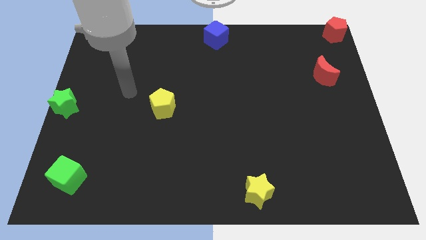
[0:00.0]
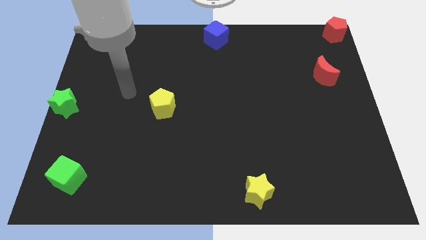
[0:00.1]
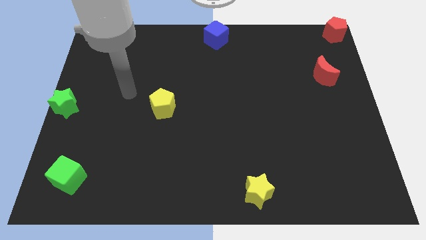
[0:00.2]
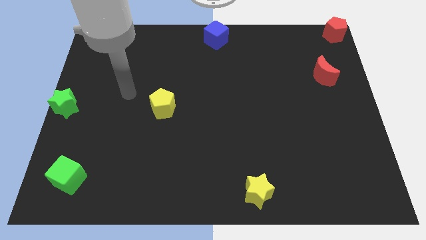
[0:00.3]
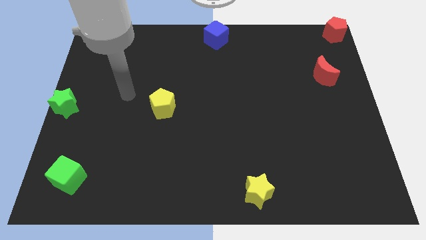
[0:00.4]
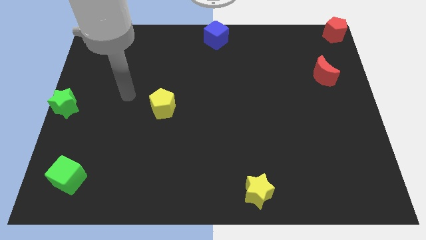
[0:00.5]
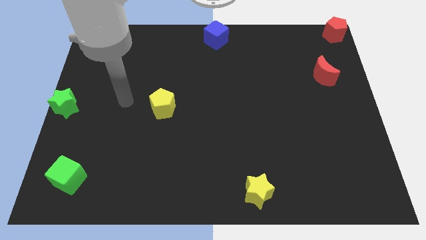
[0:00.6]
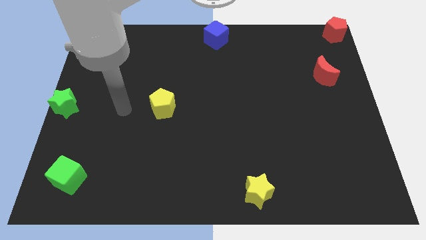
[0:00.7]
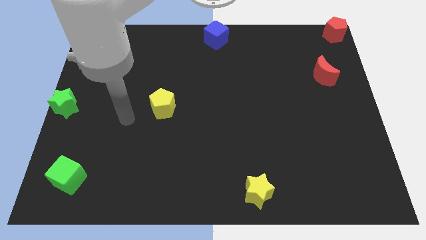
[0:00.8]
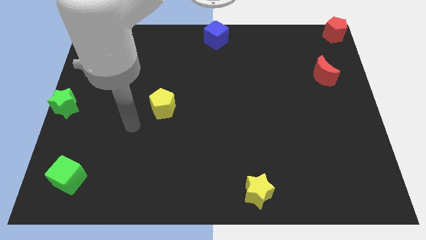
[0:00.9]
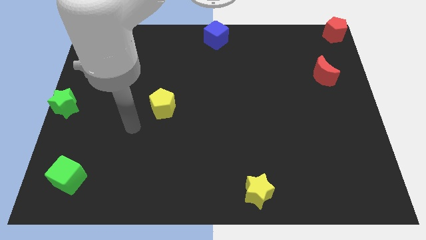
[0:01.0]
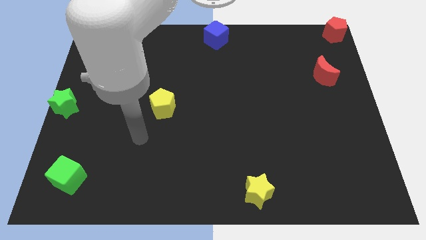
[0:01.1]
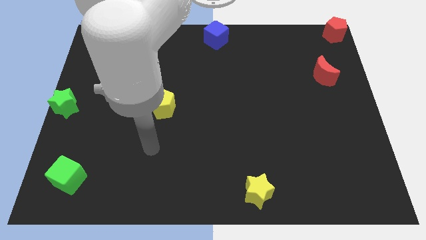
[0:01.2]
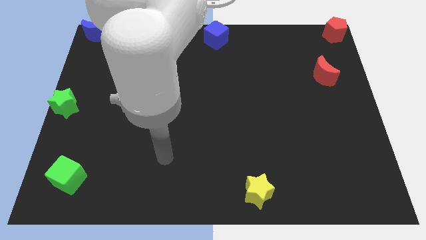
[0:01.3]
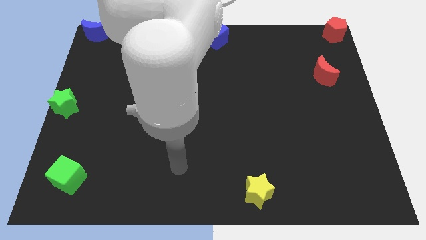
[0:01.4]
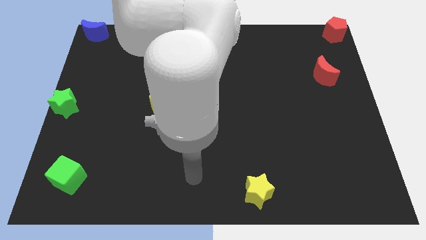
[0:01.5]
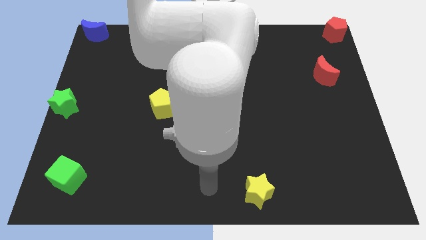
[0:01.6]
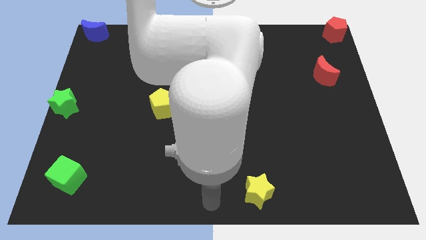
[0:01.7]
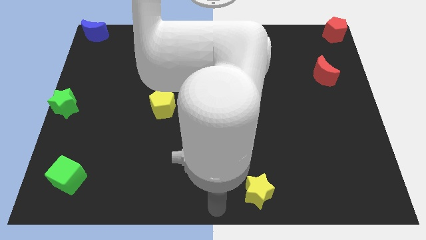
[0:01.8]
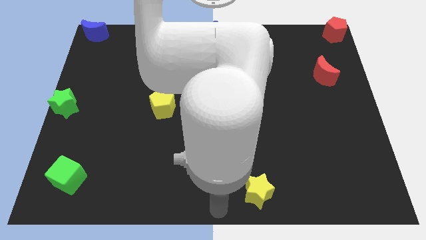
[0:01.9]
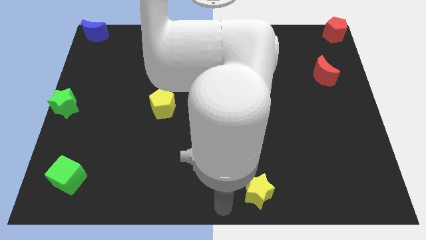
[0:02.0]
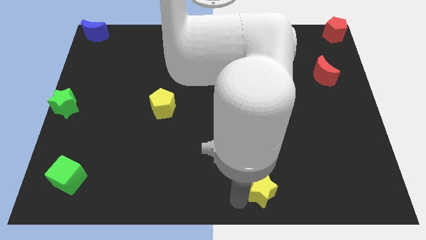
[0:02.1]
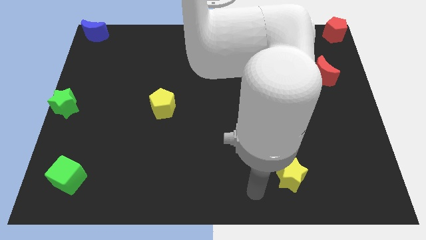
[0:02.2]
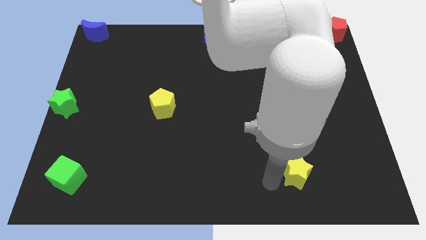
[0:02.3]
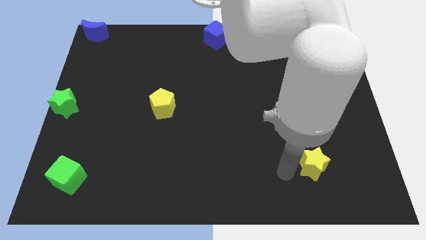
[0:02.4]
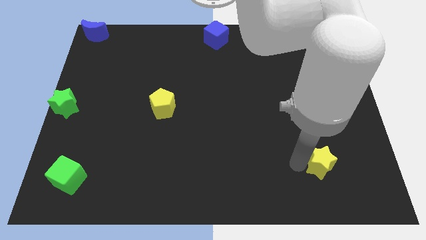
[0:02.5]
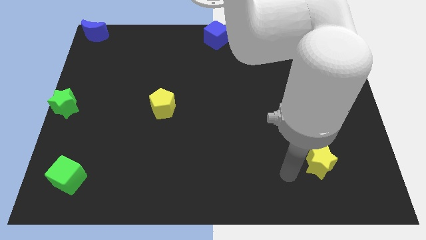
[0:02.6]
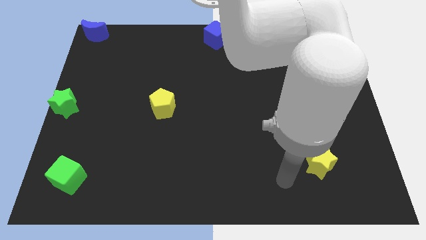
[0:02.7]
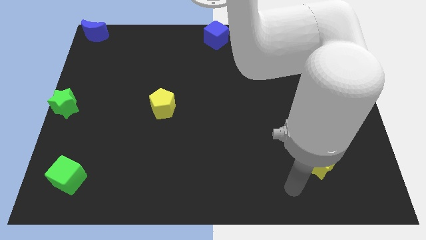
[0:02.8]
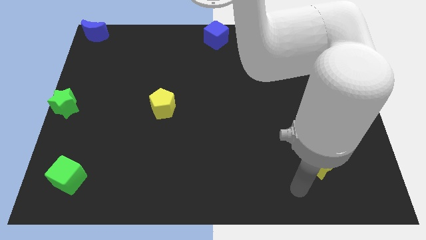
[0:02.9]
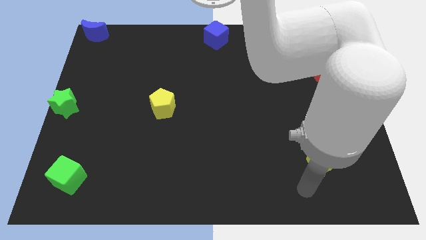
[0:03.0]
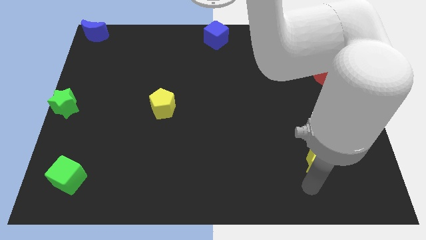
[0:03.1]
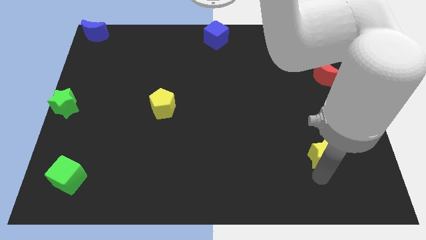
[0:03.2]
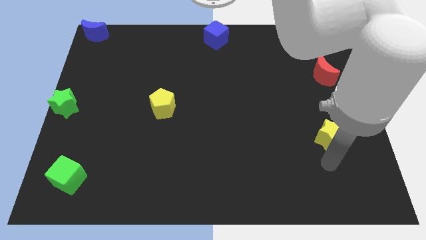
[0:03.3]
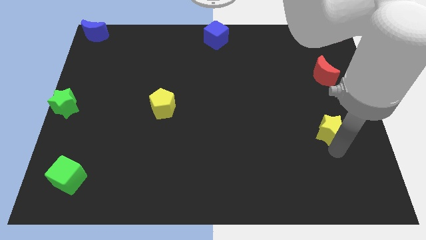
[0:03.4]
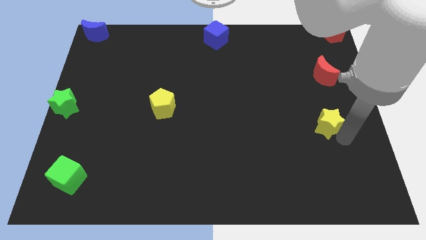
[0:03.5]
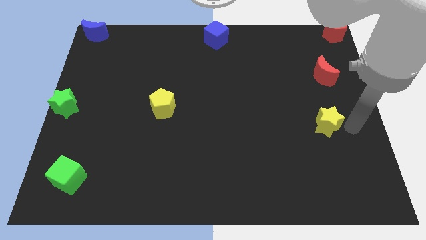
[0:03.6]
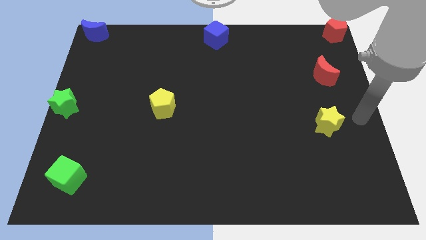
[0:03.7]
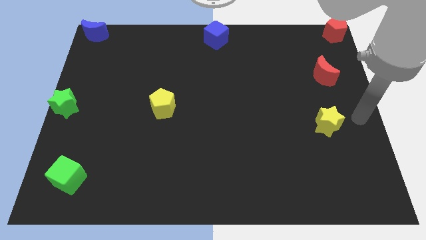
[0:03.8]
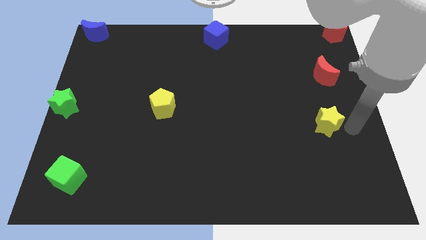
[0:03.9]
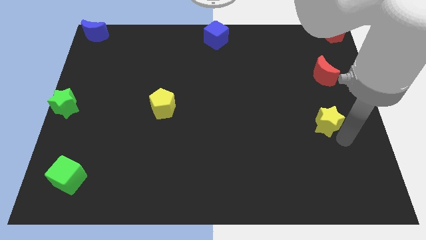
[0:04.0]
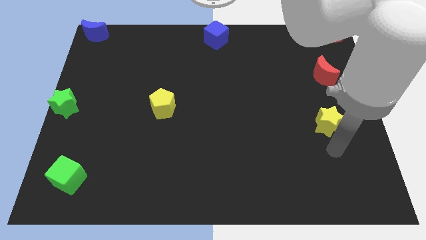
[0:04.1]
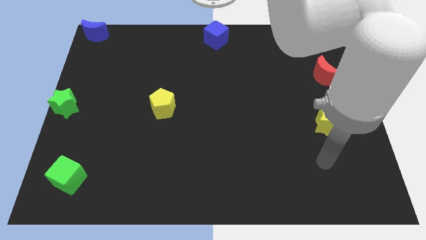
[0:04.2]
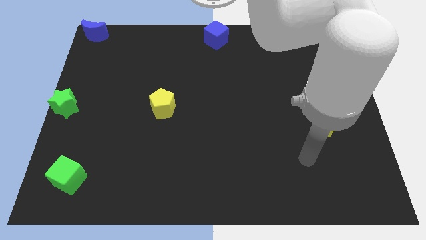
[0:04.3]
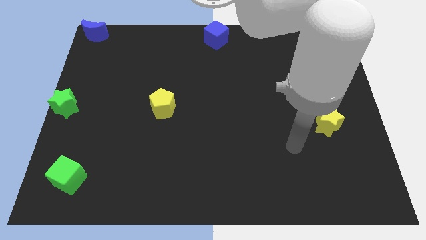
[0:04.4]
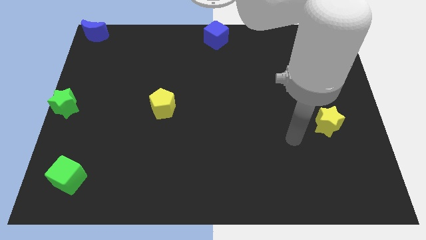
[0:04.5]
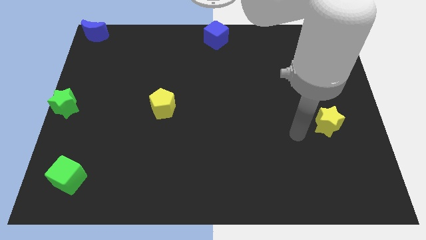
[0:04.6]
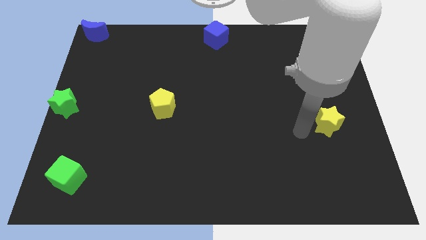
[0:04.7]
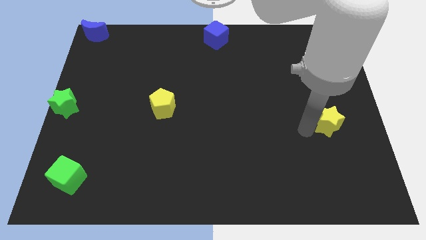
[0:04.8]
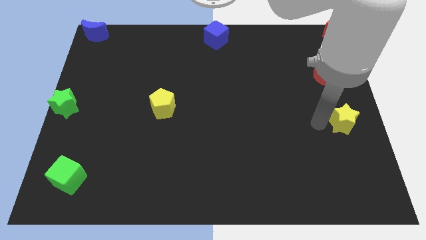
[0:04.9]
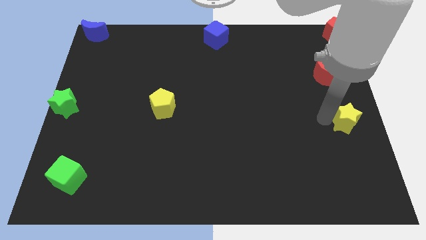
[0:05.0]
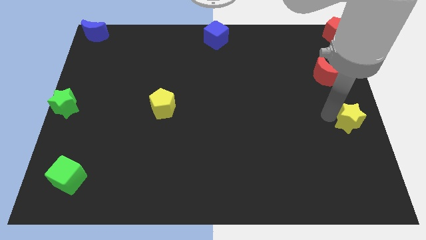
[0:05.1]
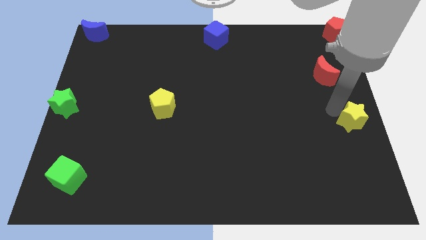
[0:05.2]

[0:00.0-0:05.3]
place the yellow star vertically below the red pentagon

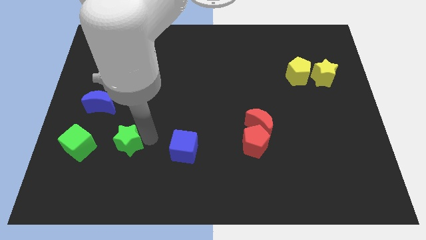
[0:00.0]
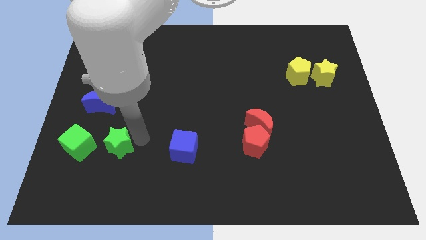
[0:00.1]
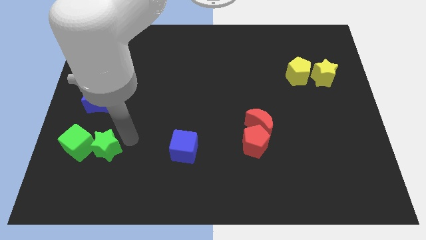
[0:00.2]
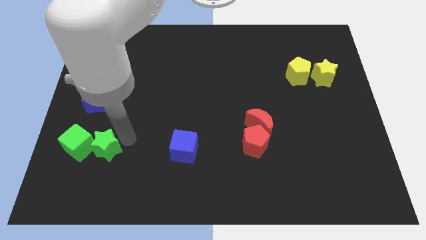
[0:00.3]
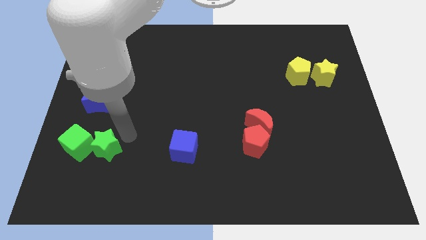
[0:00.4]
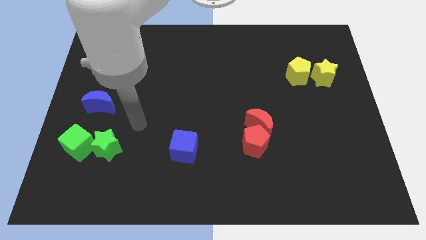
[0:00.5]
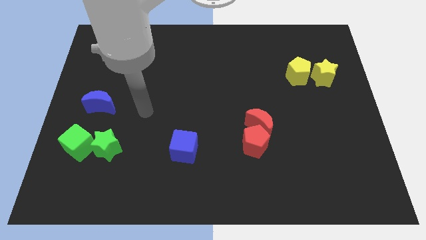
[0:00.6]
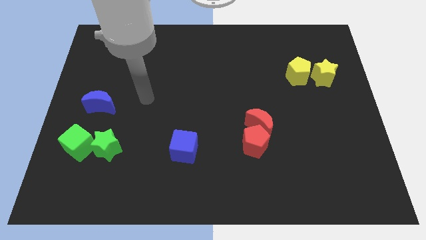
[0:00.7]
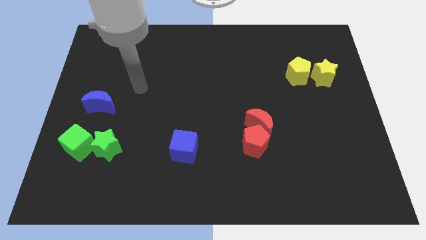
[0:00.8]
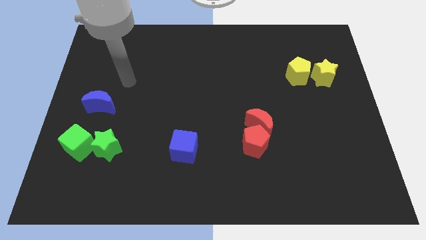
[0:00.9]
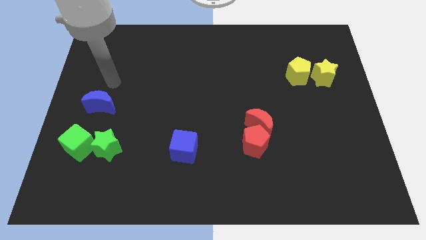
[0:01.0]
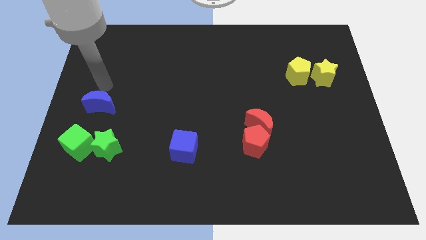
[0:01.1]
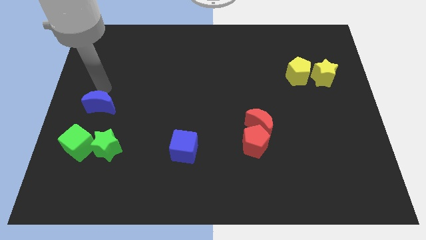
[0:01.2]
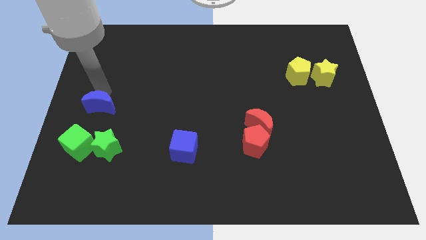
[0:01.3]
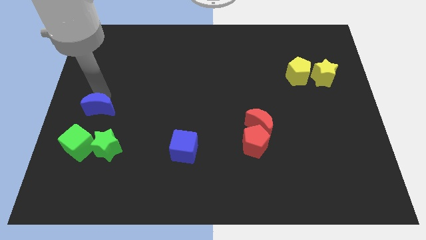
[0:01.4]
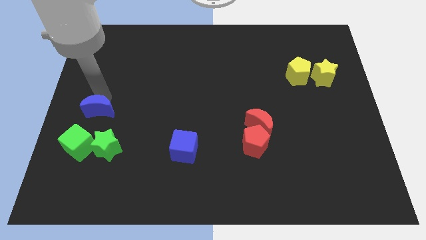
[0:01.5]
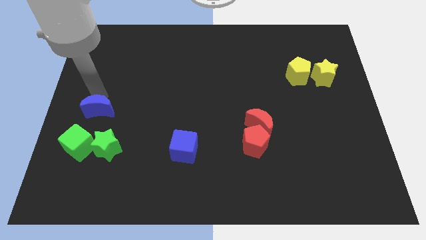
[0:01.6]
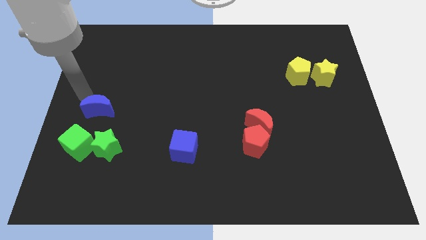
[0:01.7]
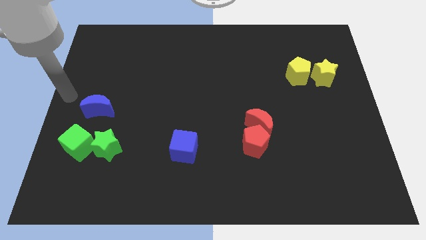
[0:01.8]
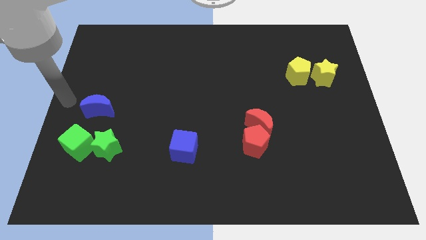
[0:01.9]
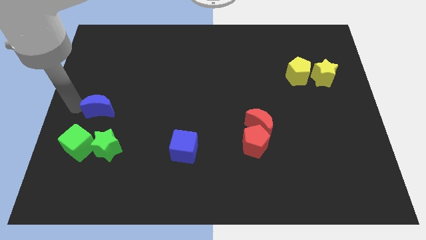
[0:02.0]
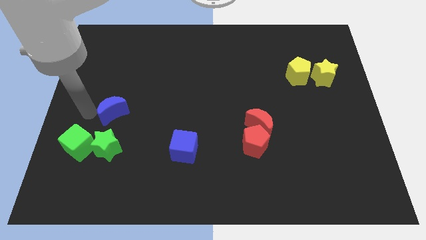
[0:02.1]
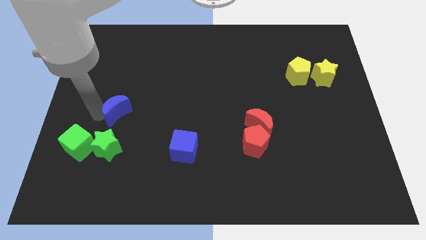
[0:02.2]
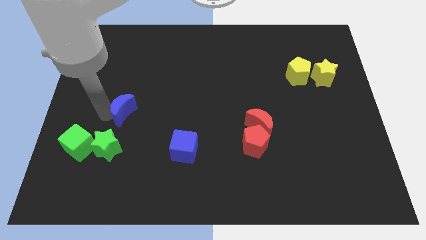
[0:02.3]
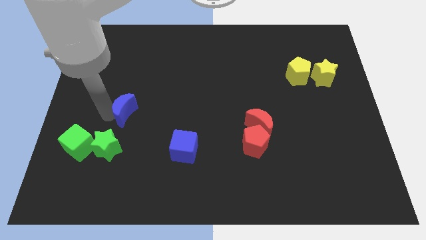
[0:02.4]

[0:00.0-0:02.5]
push blue crescent to the top side of green star

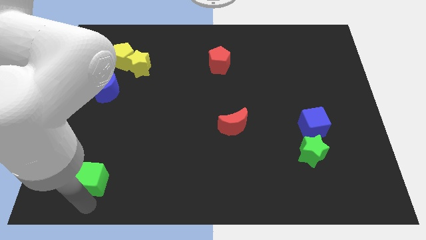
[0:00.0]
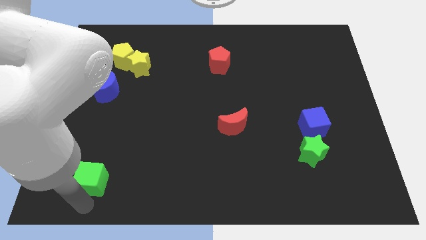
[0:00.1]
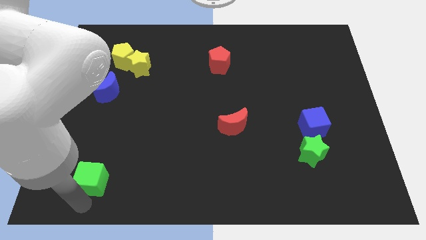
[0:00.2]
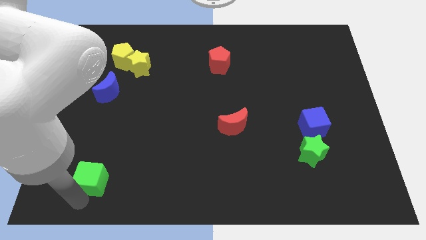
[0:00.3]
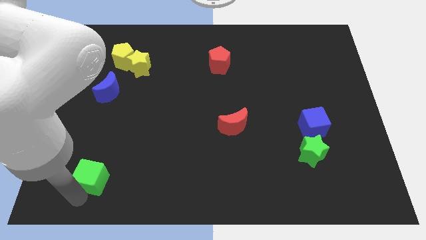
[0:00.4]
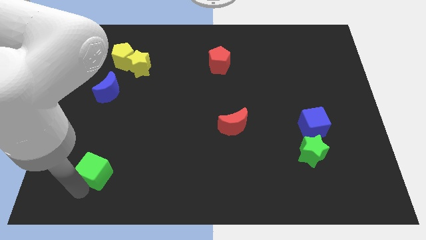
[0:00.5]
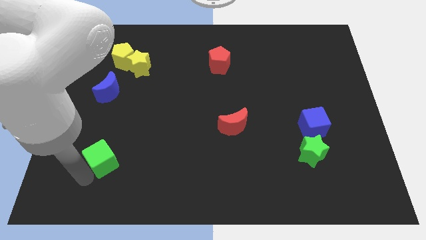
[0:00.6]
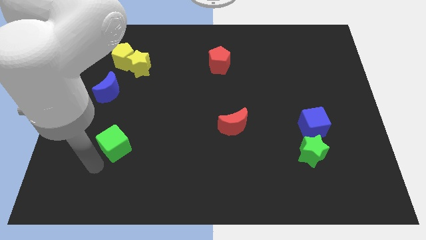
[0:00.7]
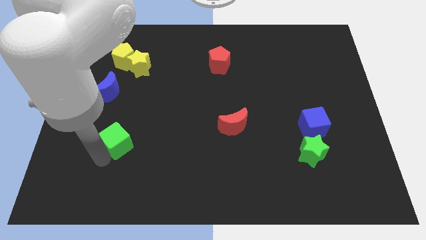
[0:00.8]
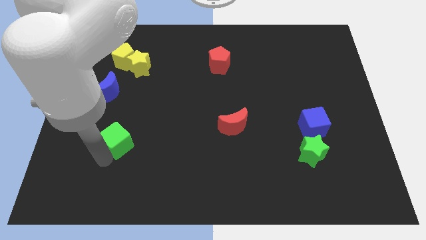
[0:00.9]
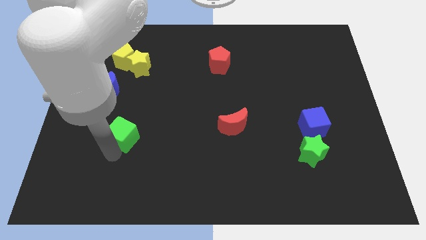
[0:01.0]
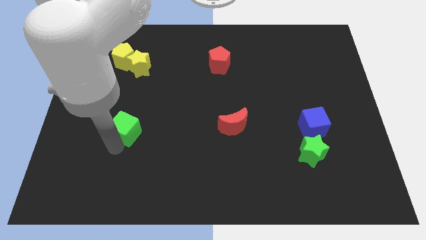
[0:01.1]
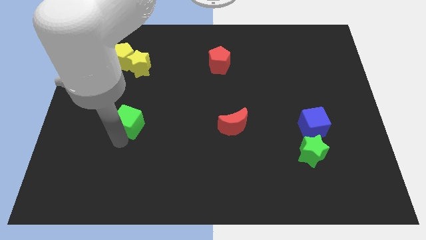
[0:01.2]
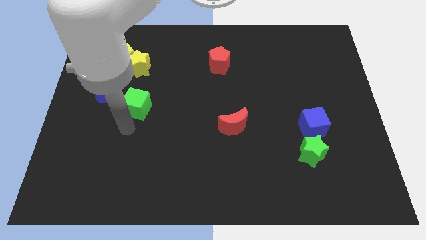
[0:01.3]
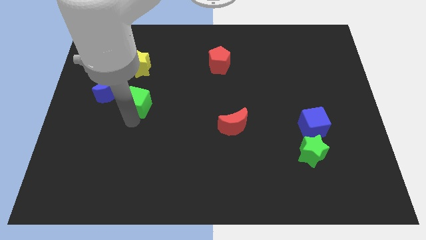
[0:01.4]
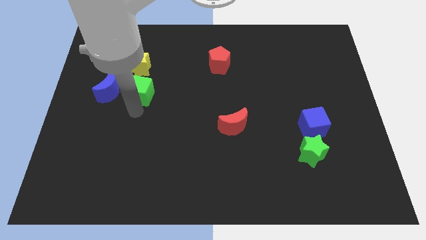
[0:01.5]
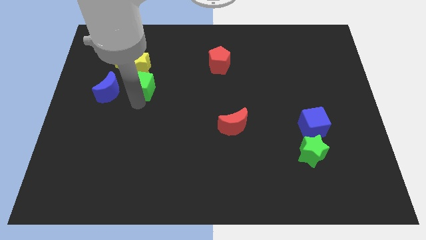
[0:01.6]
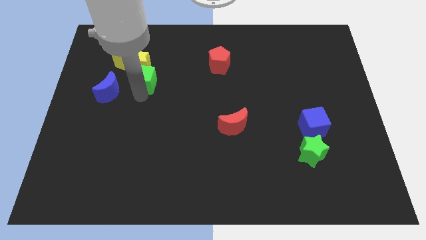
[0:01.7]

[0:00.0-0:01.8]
push the green cube slightly upwards
